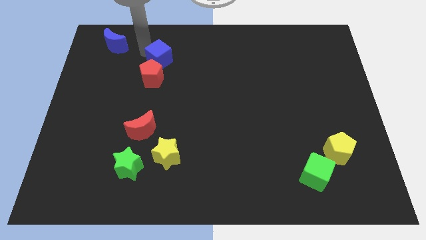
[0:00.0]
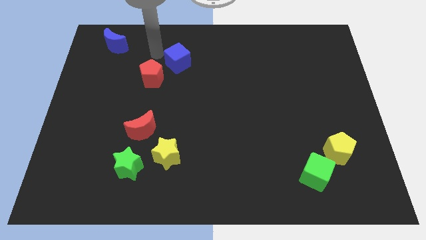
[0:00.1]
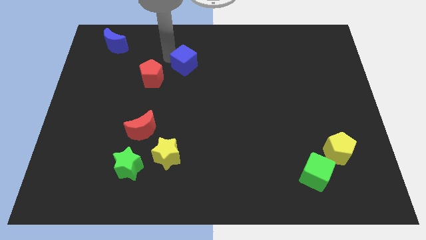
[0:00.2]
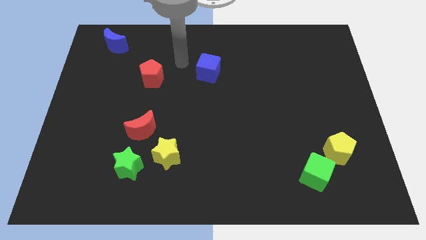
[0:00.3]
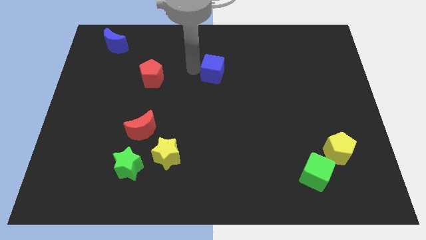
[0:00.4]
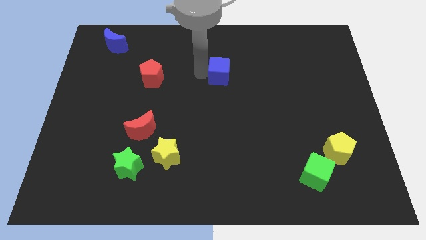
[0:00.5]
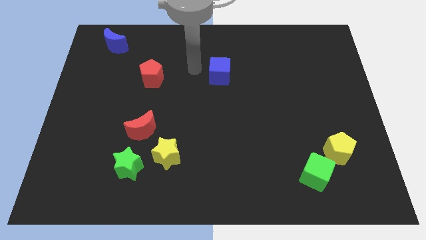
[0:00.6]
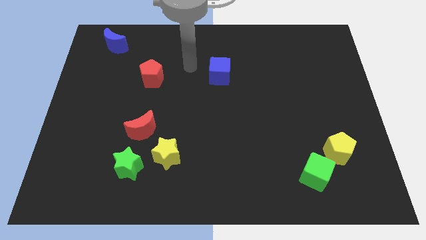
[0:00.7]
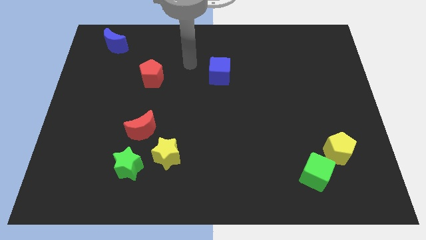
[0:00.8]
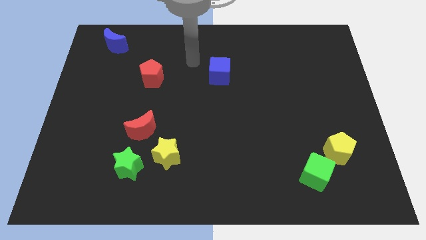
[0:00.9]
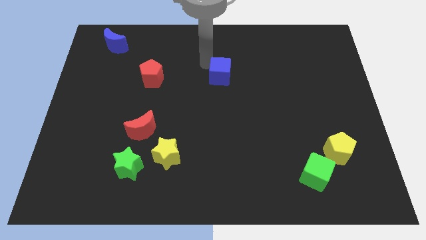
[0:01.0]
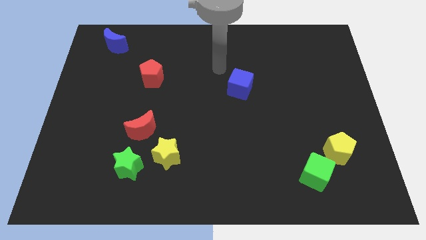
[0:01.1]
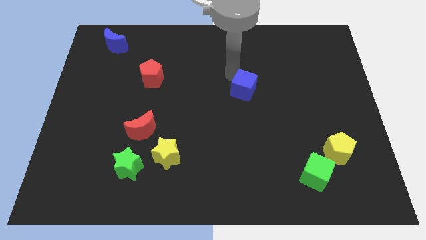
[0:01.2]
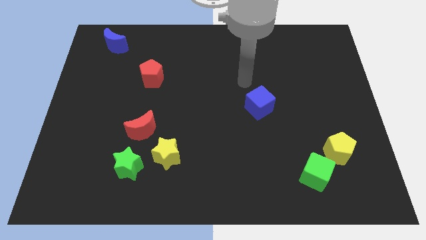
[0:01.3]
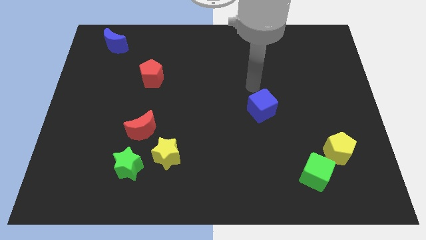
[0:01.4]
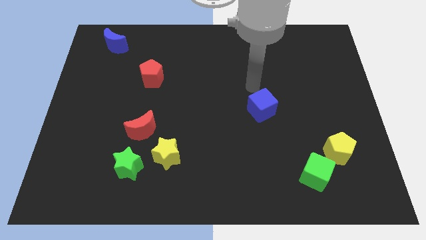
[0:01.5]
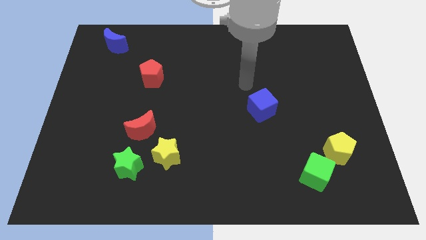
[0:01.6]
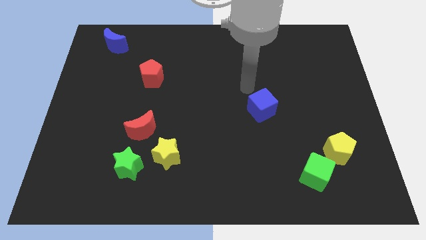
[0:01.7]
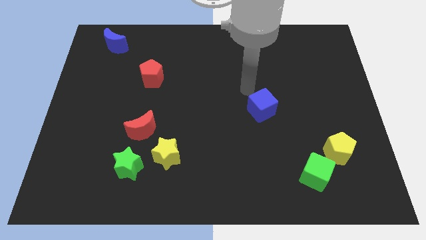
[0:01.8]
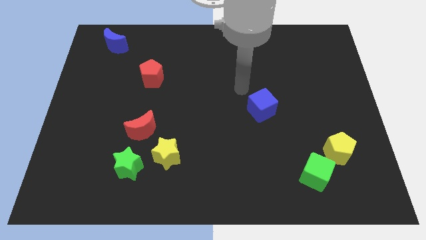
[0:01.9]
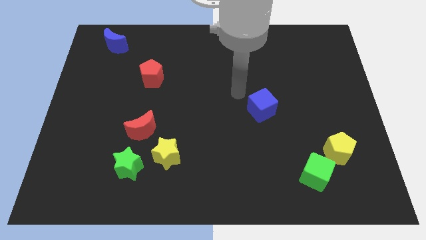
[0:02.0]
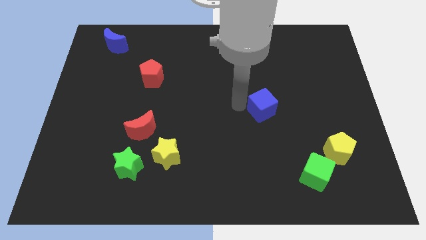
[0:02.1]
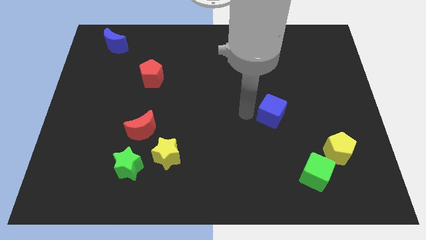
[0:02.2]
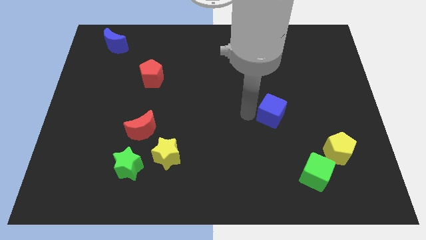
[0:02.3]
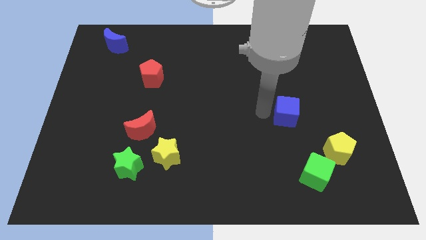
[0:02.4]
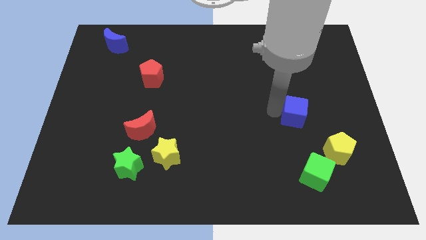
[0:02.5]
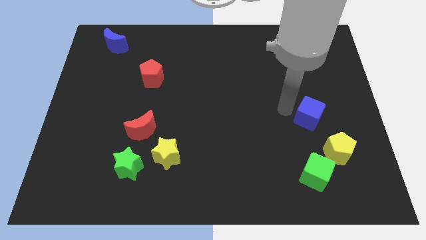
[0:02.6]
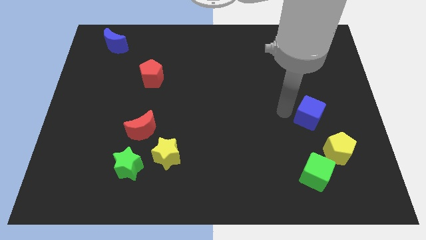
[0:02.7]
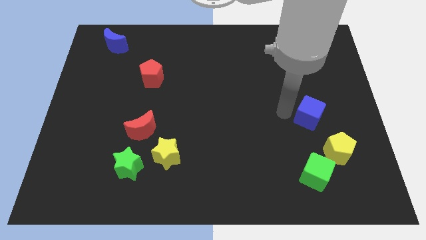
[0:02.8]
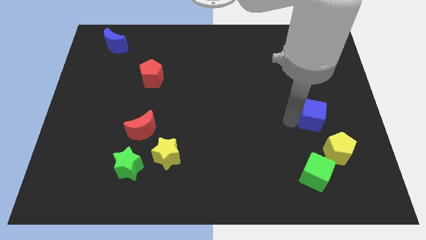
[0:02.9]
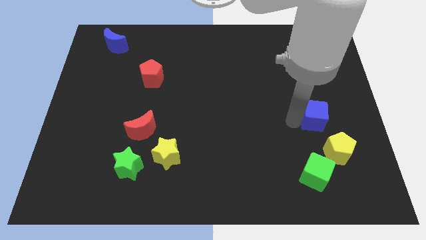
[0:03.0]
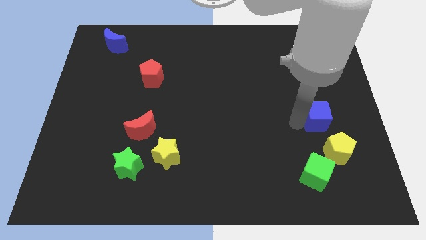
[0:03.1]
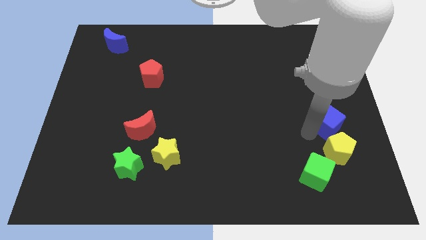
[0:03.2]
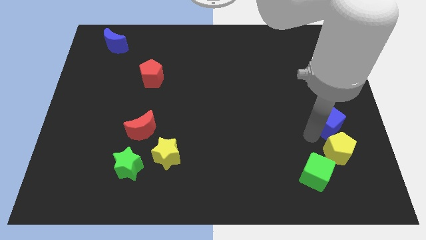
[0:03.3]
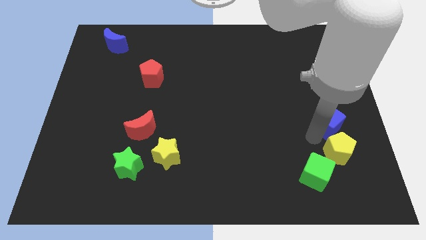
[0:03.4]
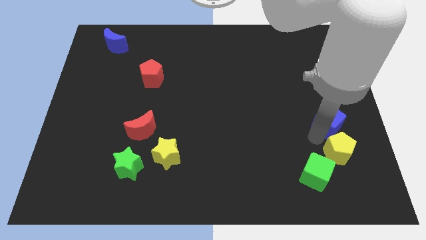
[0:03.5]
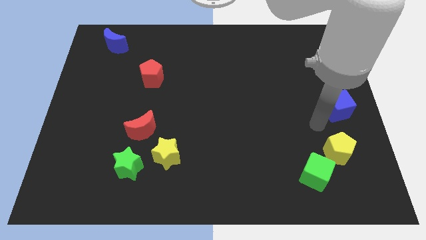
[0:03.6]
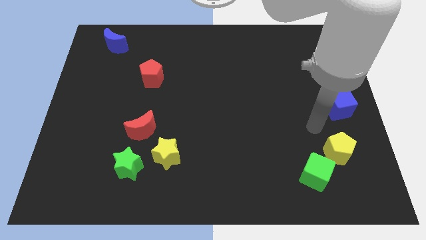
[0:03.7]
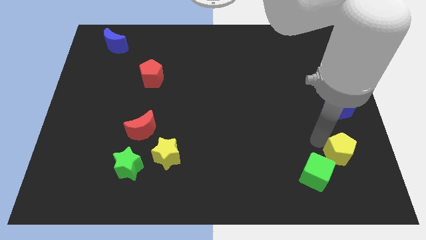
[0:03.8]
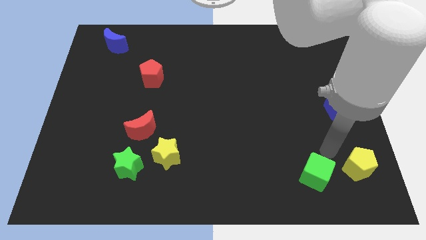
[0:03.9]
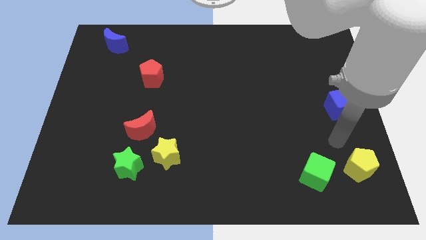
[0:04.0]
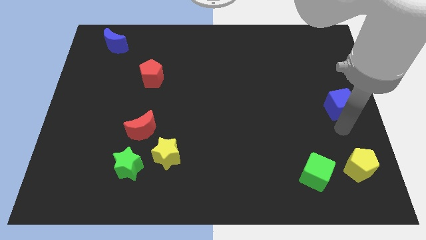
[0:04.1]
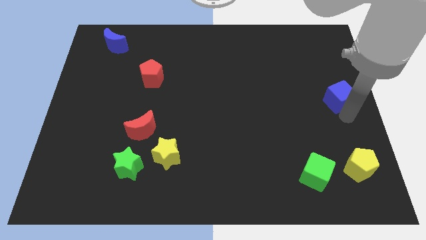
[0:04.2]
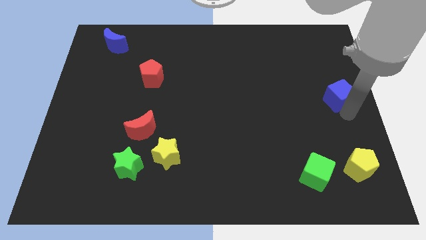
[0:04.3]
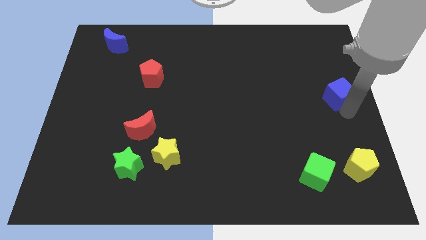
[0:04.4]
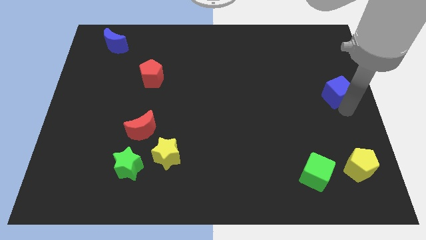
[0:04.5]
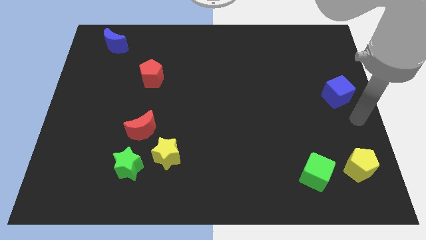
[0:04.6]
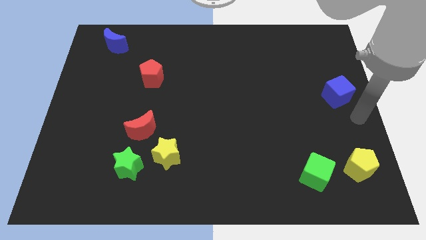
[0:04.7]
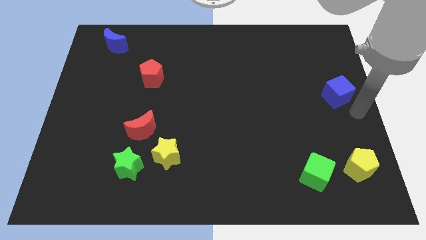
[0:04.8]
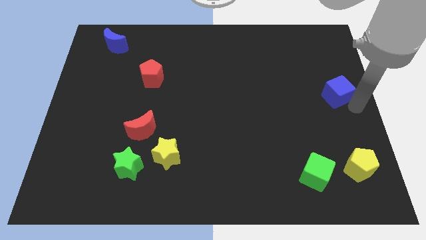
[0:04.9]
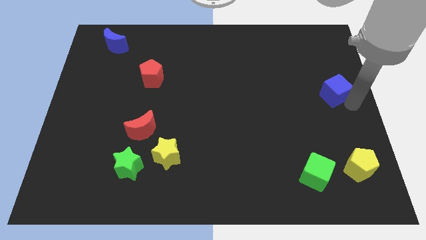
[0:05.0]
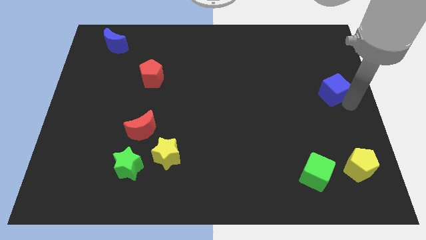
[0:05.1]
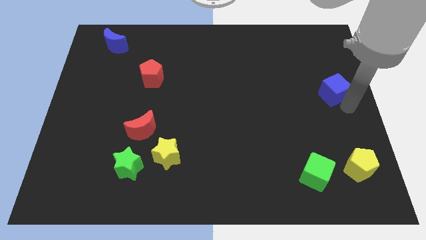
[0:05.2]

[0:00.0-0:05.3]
place the blue cube to the right middle of the board

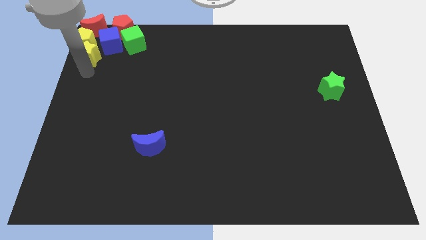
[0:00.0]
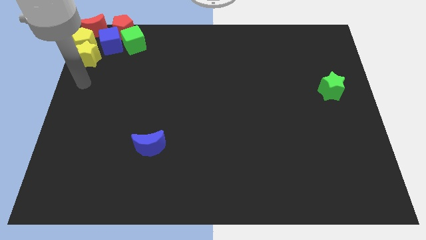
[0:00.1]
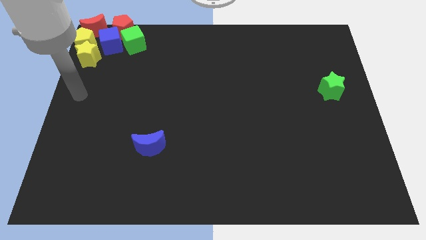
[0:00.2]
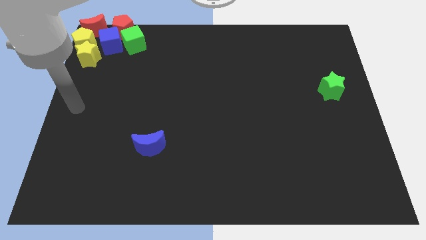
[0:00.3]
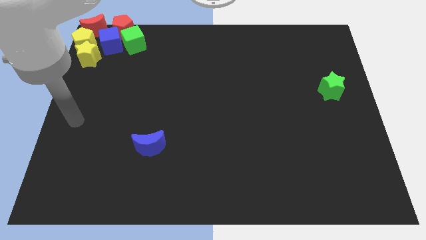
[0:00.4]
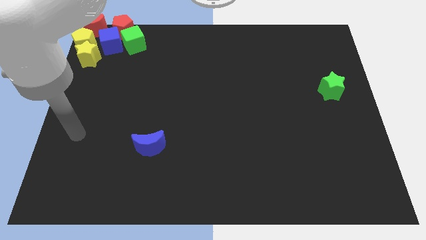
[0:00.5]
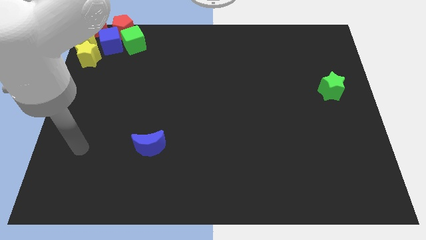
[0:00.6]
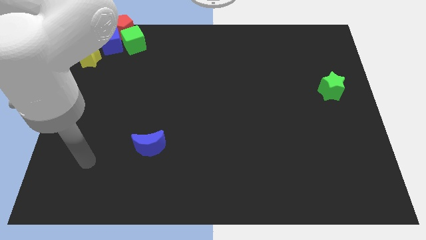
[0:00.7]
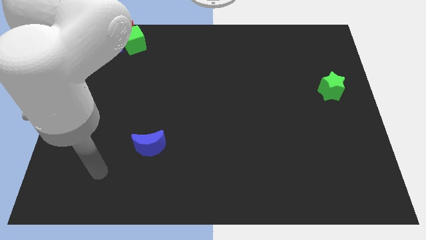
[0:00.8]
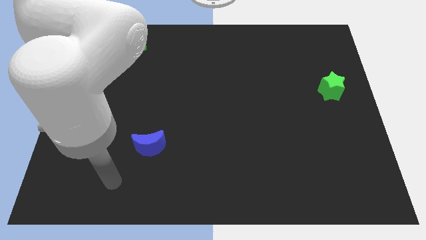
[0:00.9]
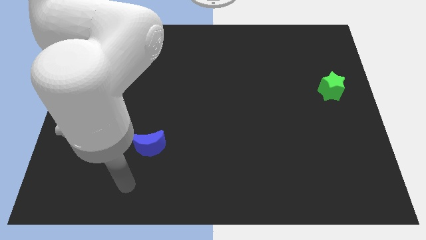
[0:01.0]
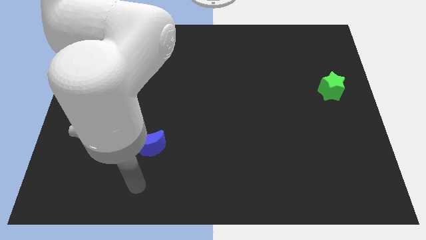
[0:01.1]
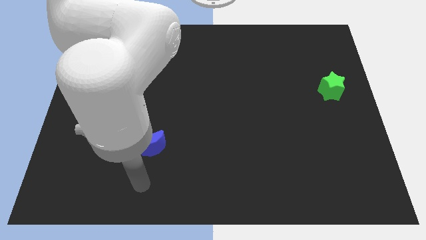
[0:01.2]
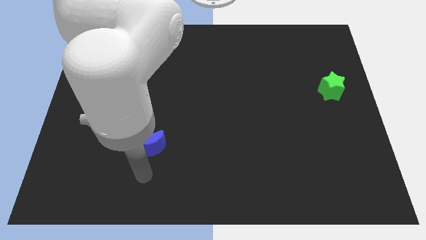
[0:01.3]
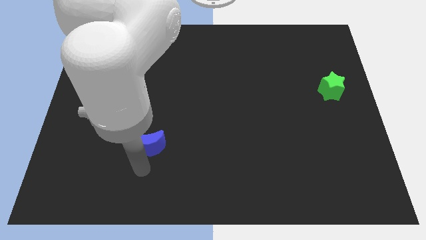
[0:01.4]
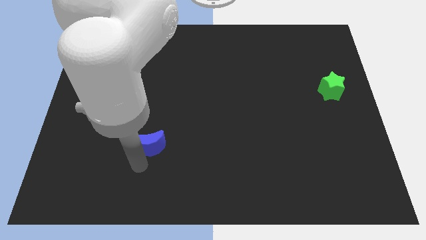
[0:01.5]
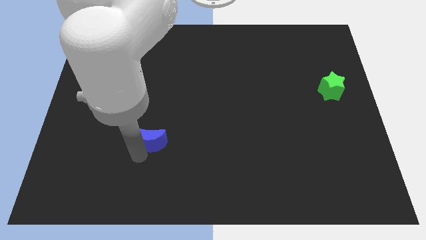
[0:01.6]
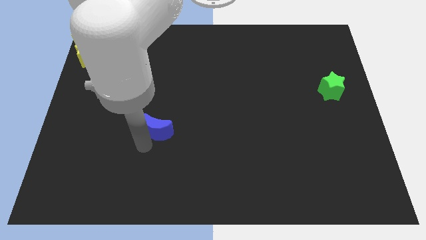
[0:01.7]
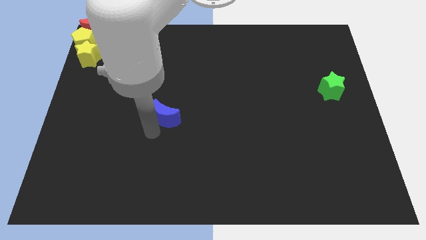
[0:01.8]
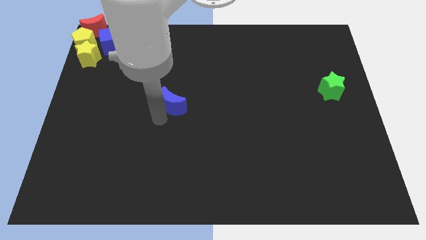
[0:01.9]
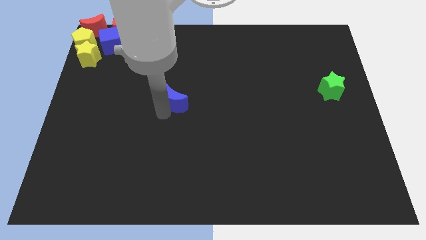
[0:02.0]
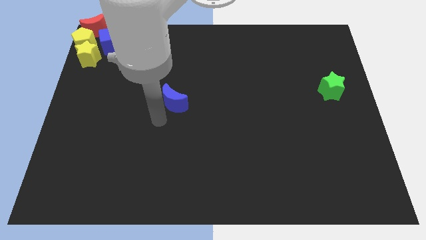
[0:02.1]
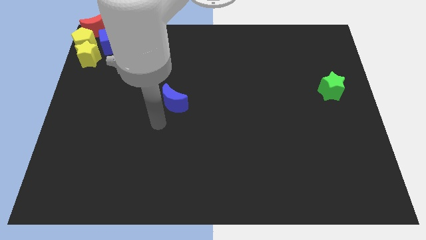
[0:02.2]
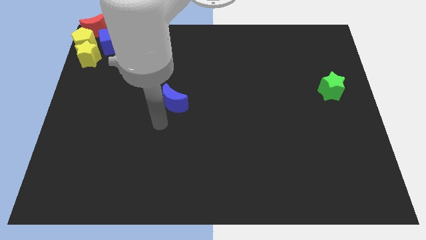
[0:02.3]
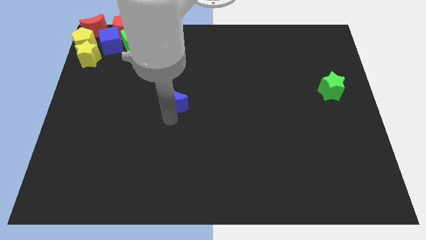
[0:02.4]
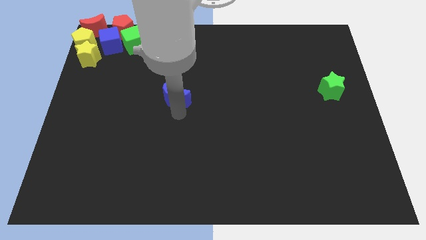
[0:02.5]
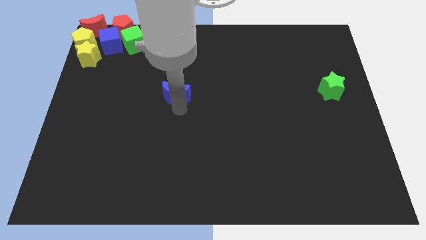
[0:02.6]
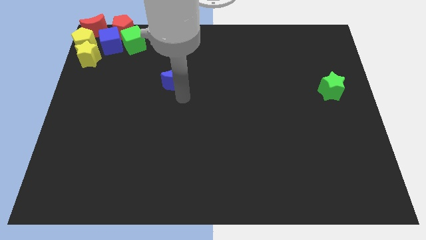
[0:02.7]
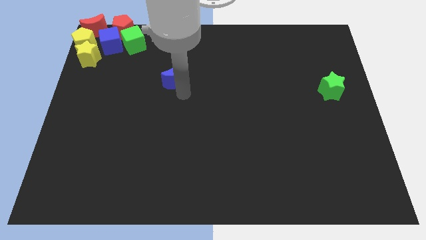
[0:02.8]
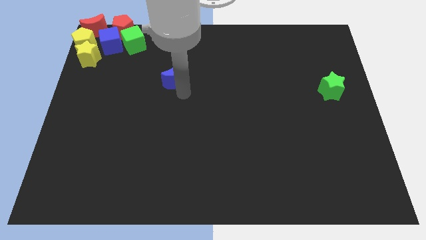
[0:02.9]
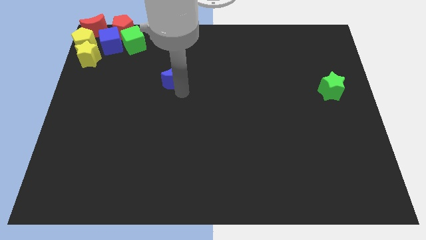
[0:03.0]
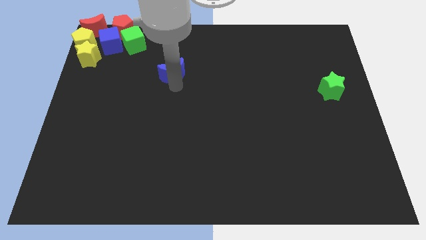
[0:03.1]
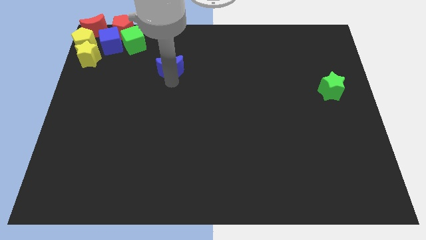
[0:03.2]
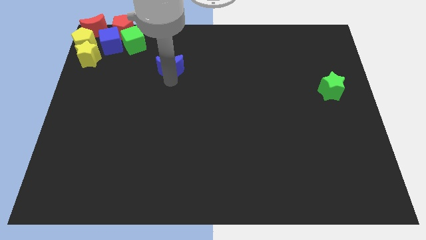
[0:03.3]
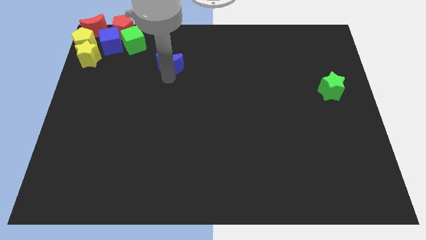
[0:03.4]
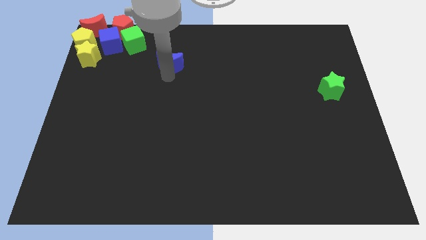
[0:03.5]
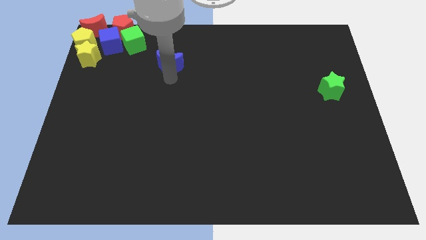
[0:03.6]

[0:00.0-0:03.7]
move the blue moon towards top center
